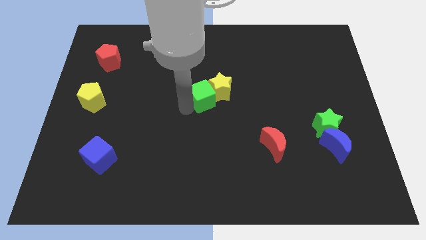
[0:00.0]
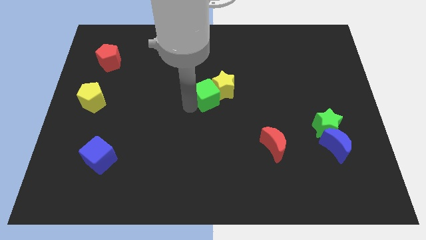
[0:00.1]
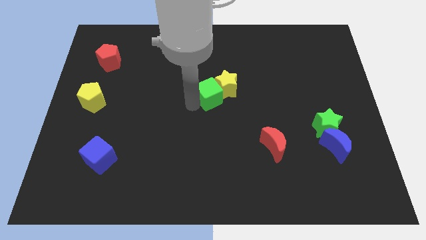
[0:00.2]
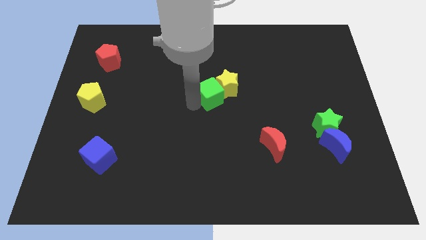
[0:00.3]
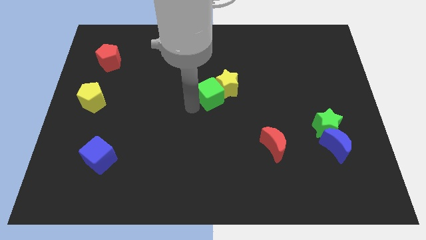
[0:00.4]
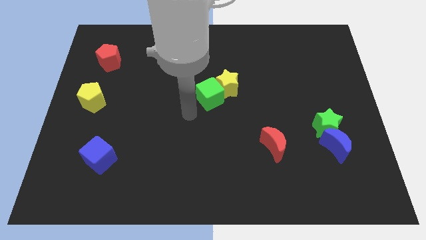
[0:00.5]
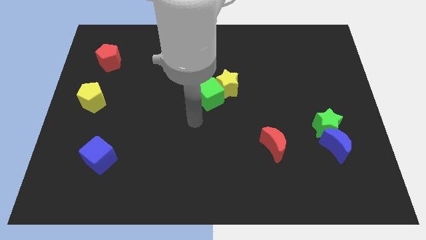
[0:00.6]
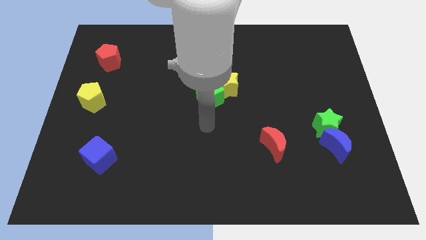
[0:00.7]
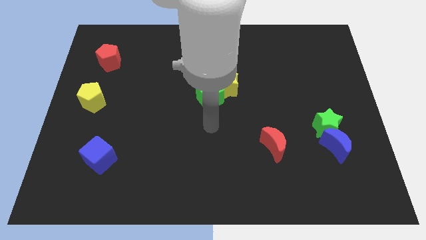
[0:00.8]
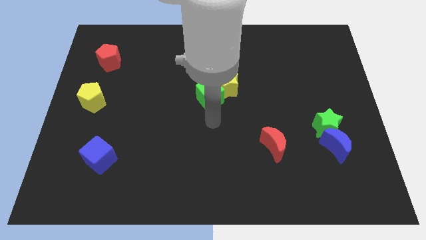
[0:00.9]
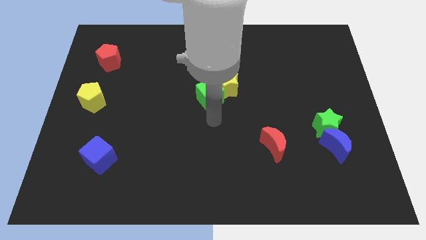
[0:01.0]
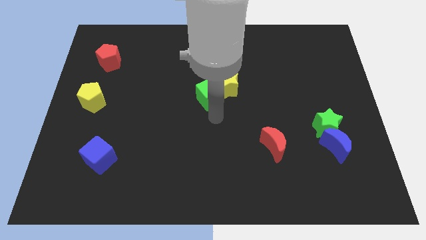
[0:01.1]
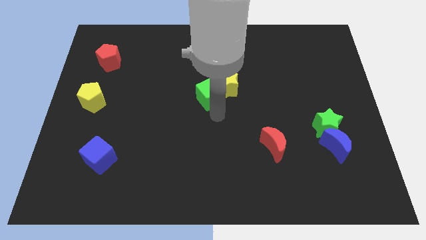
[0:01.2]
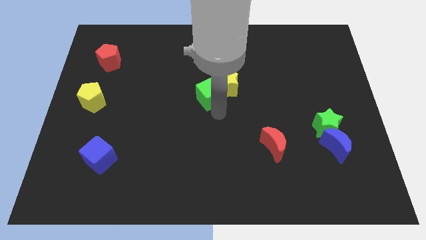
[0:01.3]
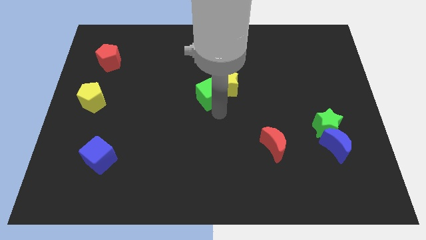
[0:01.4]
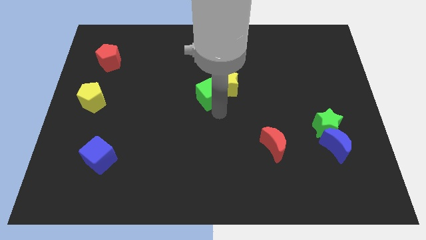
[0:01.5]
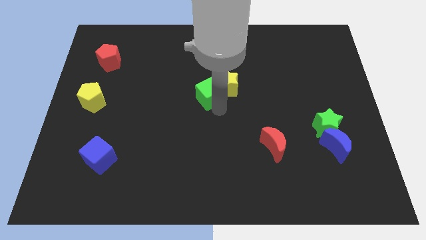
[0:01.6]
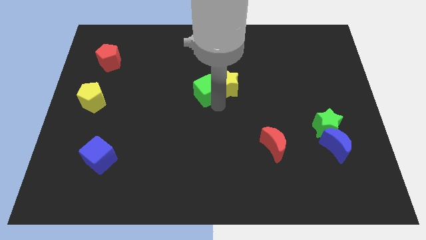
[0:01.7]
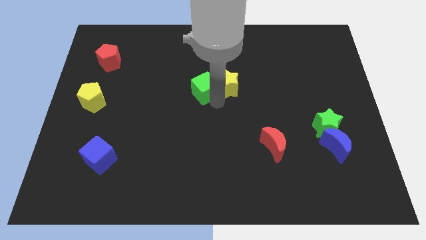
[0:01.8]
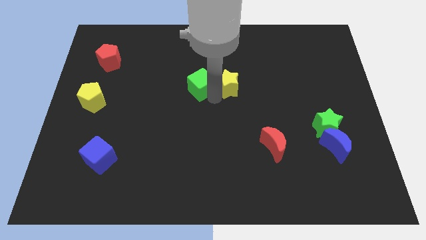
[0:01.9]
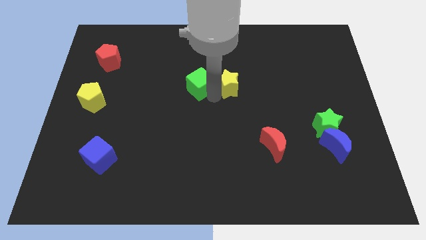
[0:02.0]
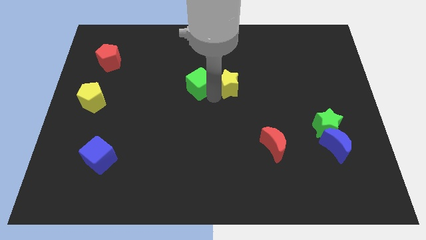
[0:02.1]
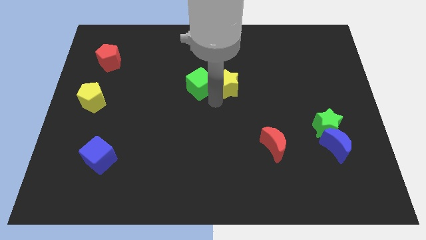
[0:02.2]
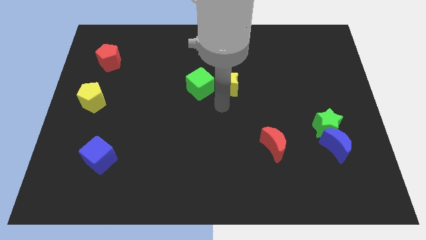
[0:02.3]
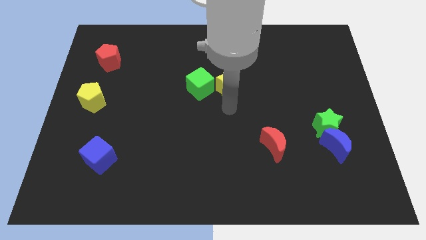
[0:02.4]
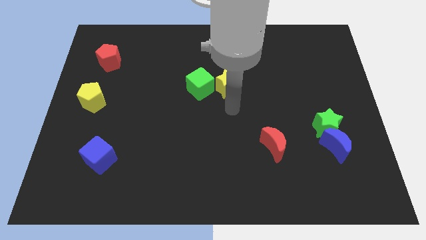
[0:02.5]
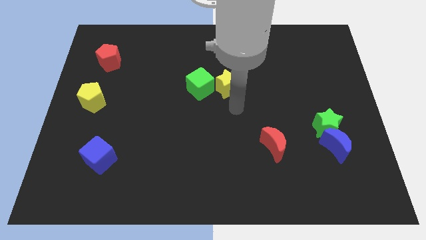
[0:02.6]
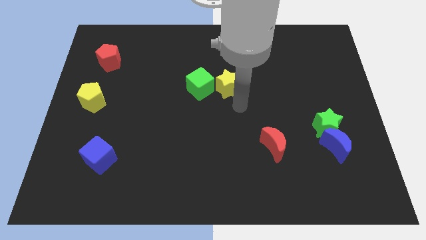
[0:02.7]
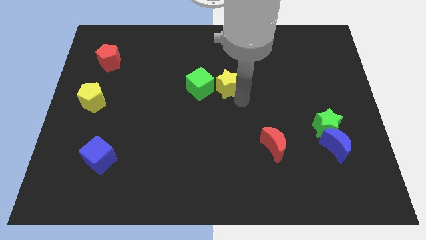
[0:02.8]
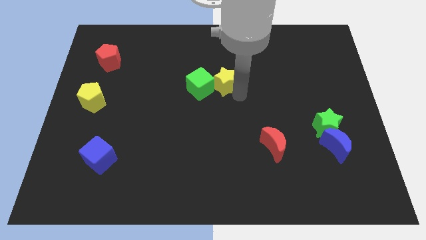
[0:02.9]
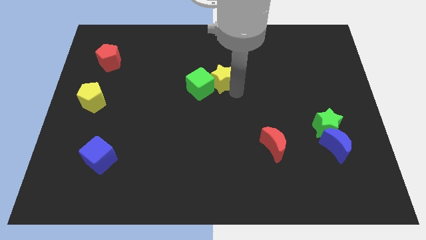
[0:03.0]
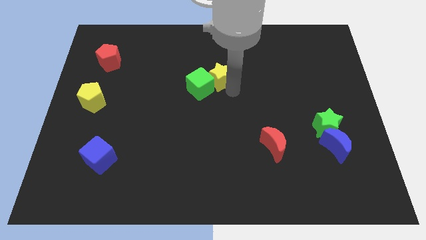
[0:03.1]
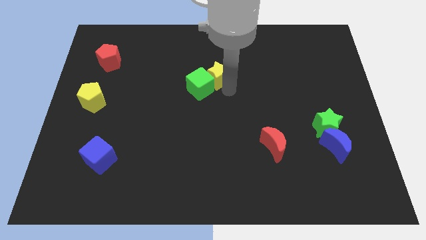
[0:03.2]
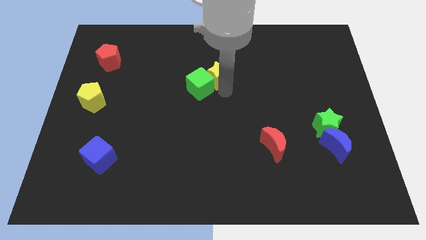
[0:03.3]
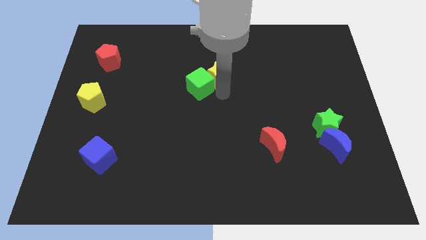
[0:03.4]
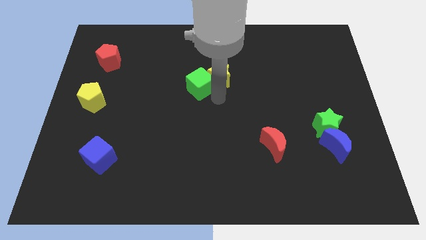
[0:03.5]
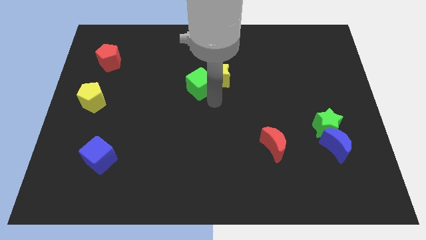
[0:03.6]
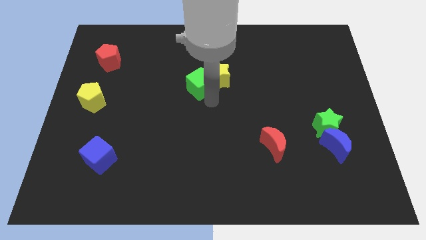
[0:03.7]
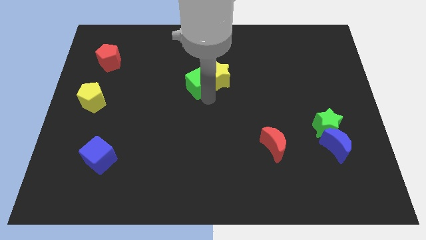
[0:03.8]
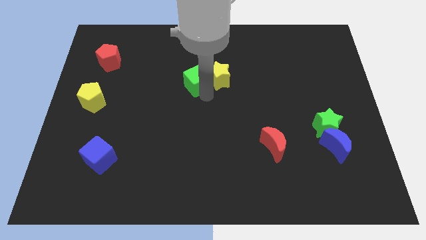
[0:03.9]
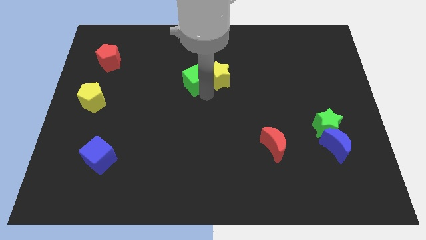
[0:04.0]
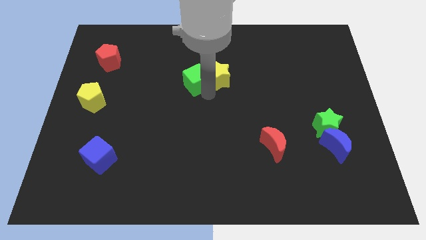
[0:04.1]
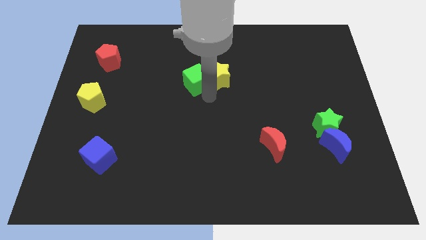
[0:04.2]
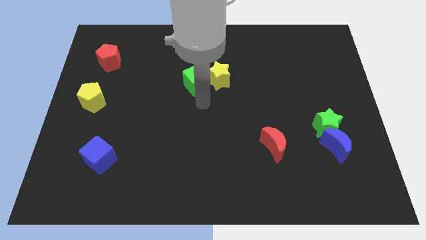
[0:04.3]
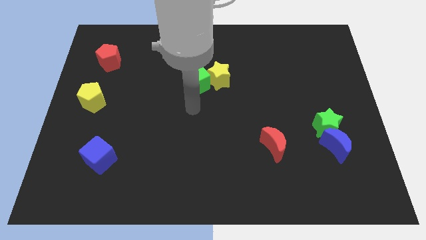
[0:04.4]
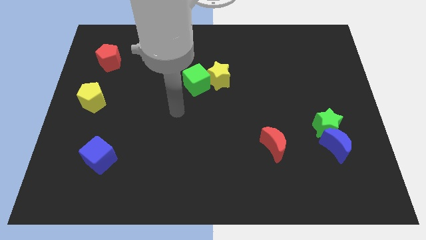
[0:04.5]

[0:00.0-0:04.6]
move green cube and yellow star slightly upwards

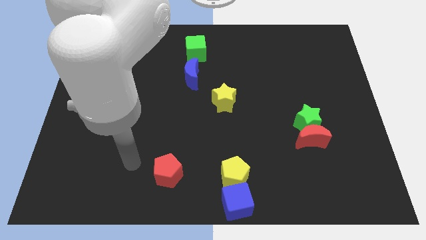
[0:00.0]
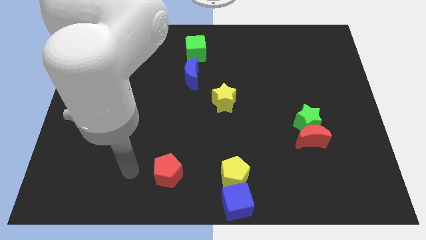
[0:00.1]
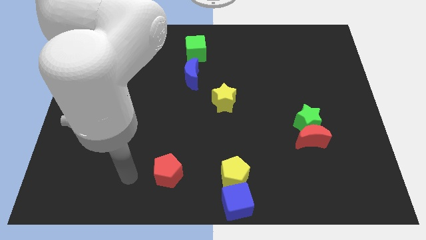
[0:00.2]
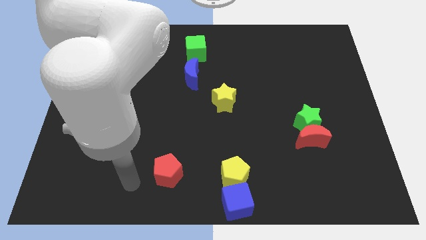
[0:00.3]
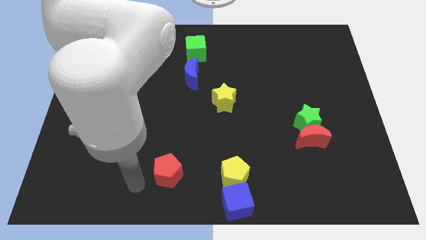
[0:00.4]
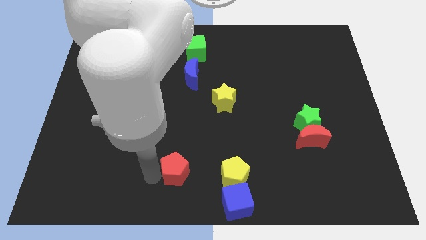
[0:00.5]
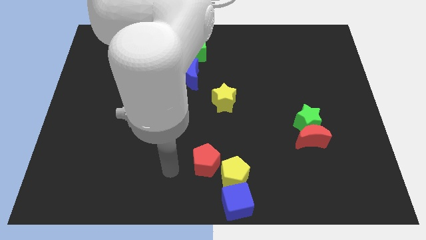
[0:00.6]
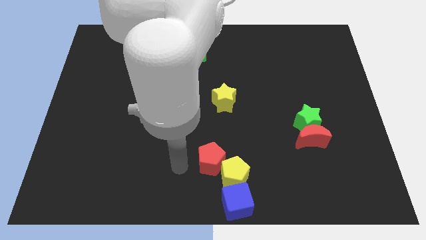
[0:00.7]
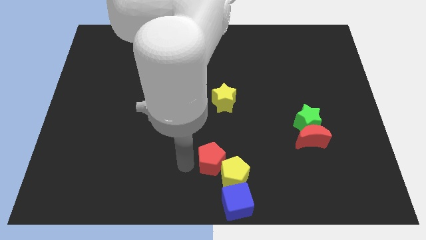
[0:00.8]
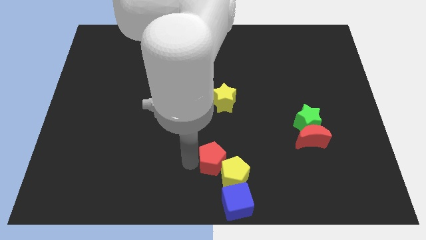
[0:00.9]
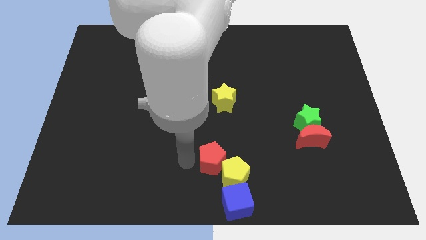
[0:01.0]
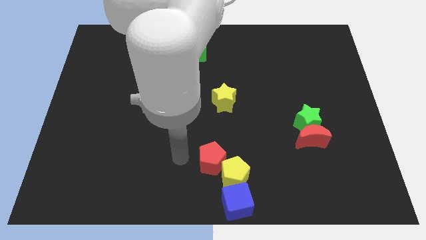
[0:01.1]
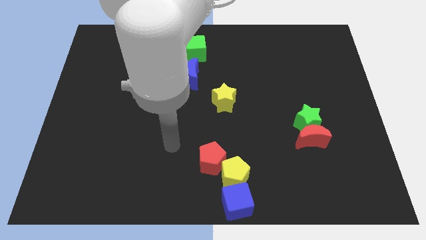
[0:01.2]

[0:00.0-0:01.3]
move your arm at the top left of the yellow pentagon

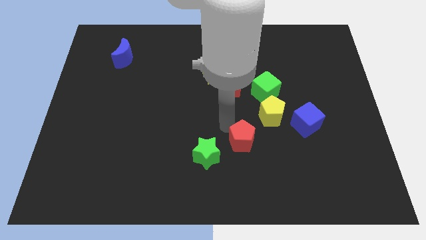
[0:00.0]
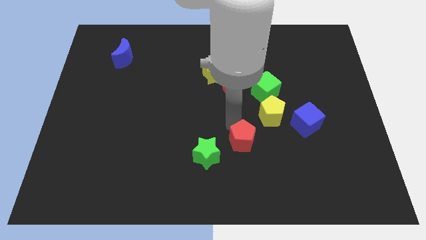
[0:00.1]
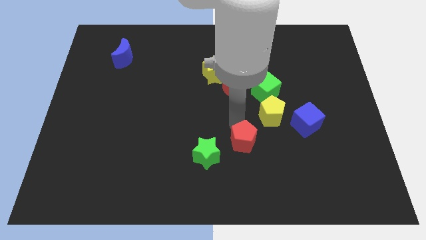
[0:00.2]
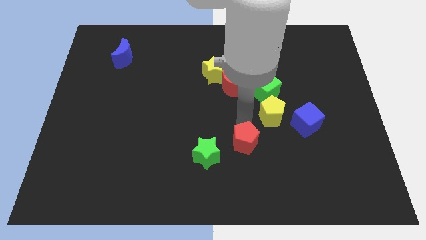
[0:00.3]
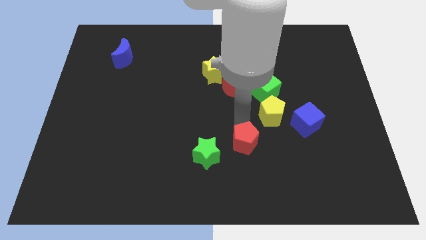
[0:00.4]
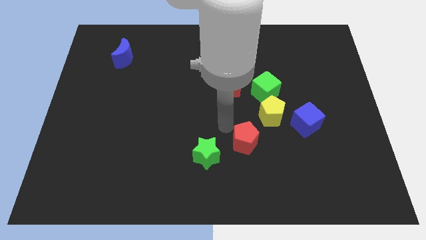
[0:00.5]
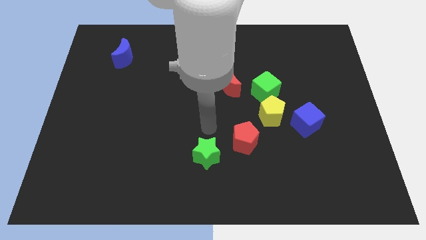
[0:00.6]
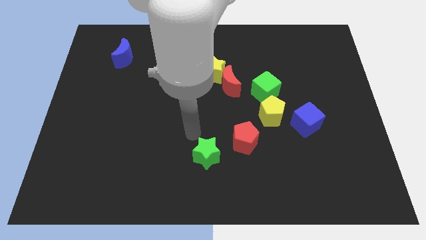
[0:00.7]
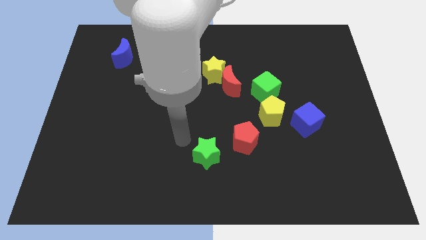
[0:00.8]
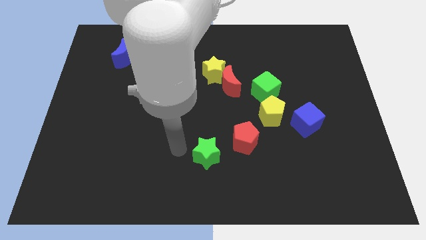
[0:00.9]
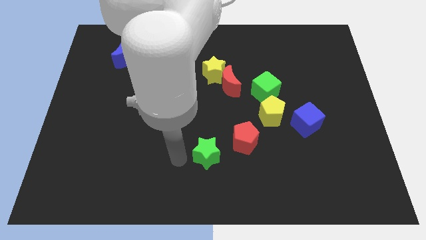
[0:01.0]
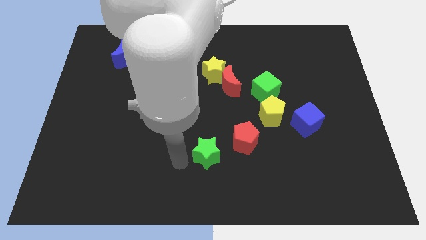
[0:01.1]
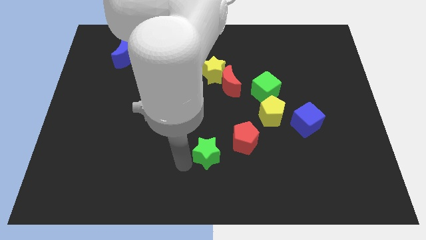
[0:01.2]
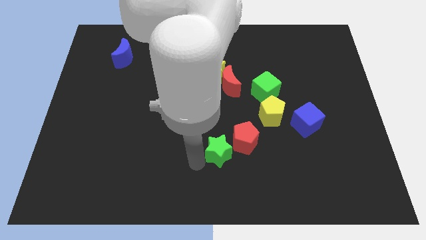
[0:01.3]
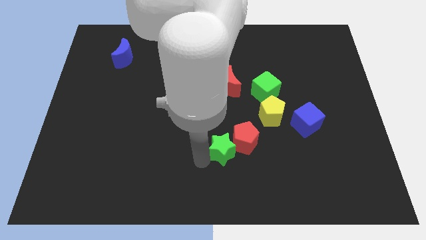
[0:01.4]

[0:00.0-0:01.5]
push the green star into the red pentagon

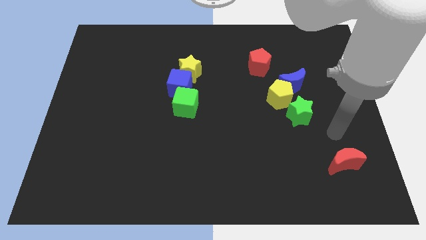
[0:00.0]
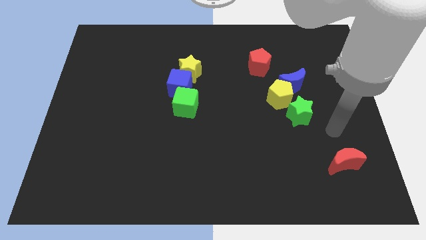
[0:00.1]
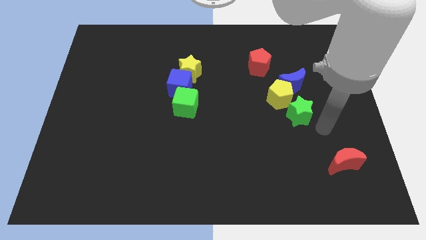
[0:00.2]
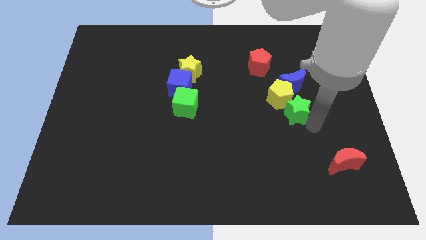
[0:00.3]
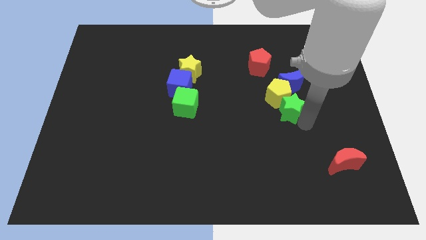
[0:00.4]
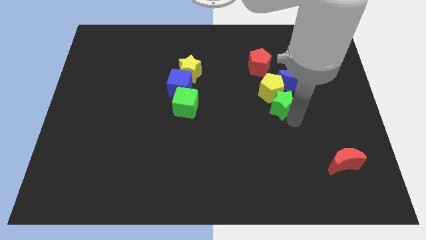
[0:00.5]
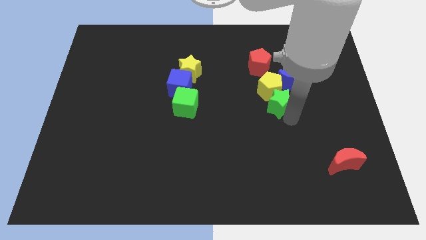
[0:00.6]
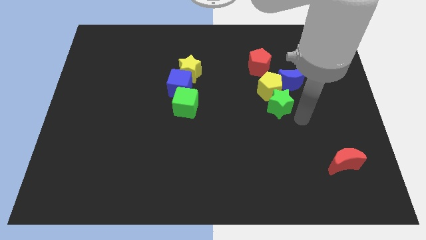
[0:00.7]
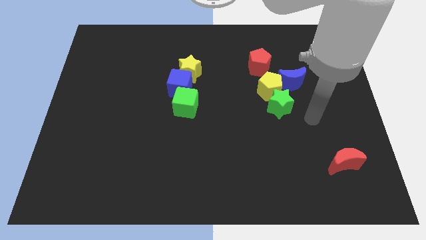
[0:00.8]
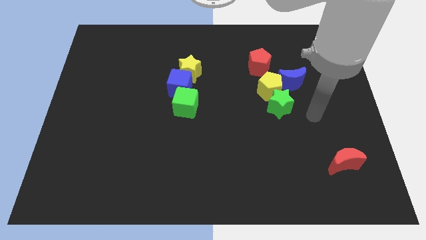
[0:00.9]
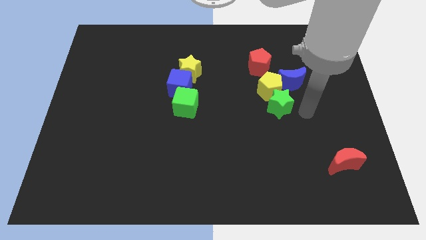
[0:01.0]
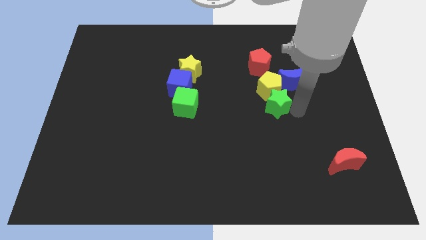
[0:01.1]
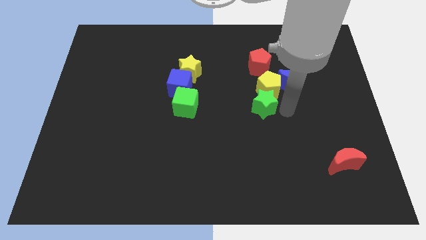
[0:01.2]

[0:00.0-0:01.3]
slide green star to the bottom of yellow pentagon

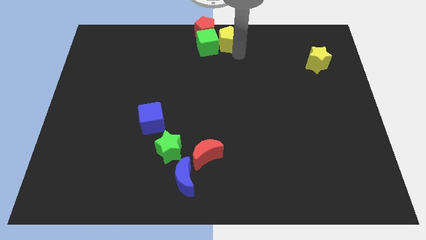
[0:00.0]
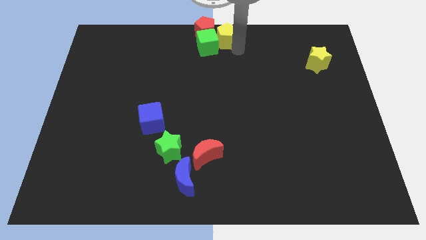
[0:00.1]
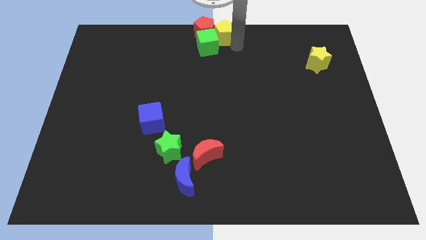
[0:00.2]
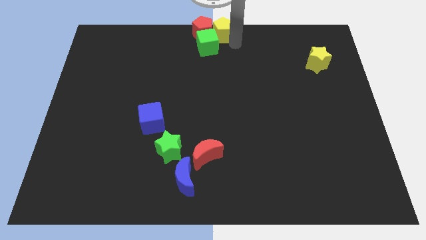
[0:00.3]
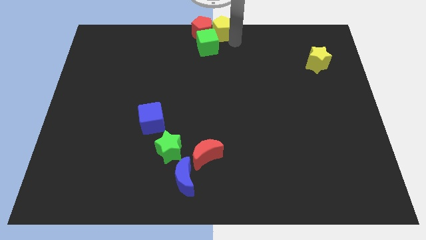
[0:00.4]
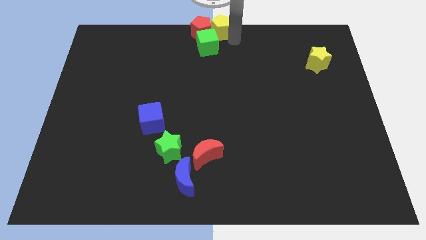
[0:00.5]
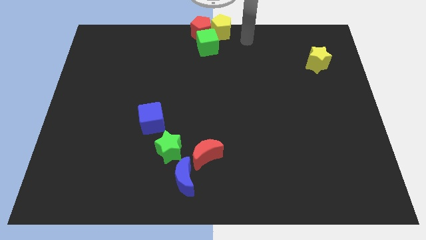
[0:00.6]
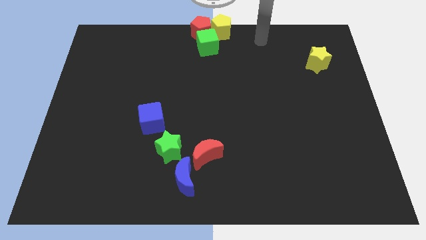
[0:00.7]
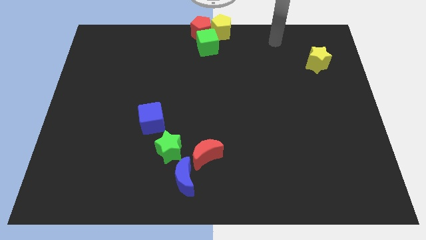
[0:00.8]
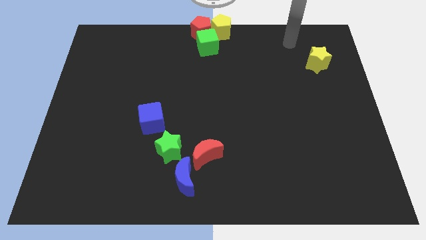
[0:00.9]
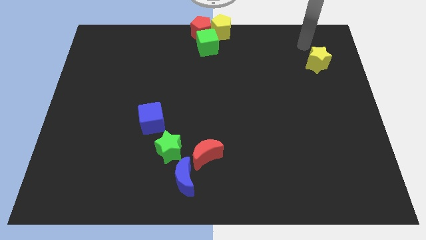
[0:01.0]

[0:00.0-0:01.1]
move the yellow pentagon to the center top of the board
